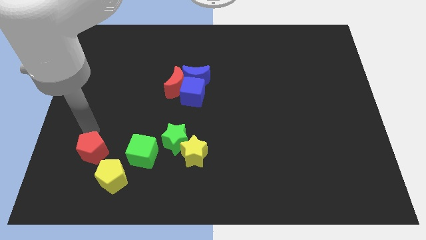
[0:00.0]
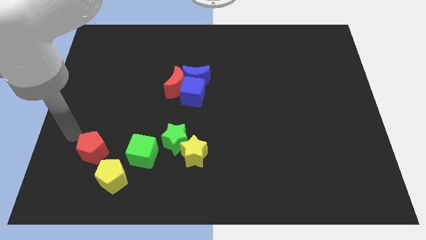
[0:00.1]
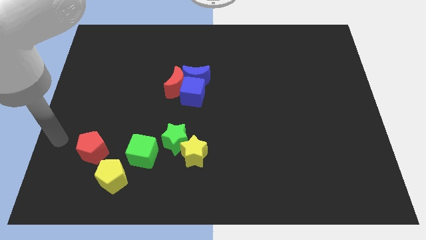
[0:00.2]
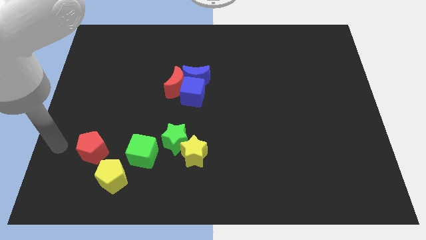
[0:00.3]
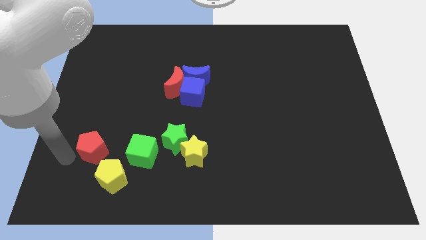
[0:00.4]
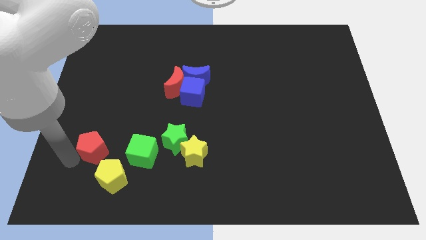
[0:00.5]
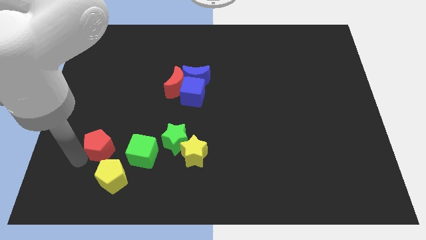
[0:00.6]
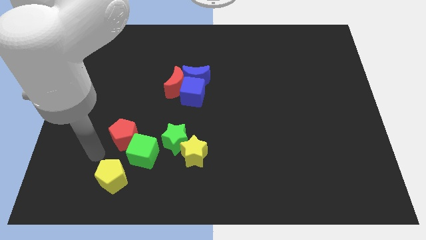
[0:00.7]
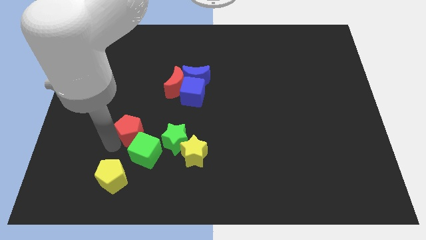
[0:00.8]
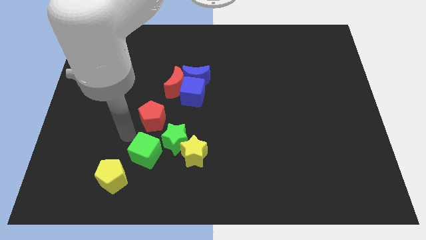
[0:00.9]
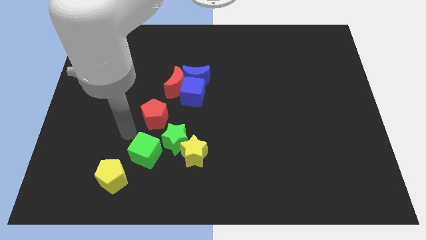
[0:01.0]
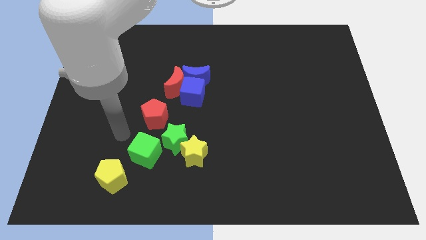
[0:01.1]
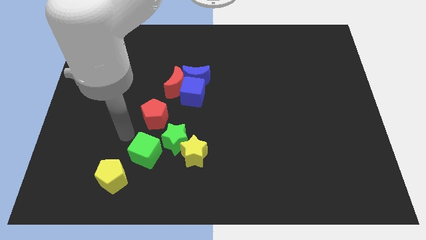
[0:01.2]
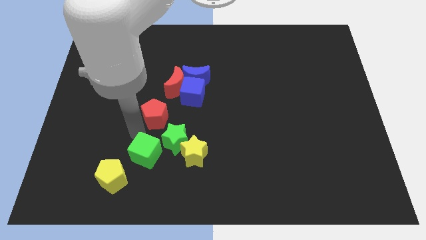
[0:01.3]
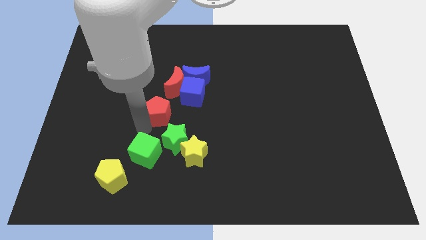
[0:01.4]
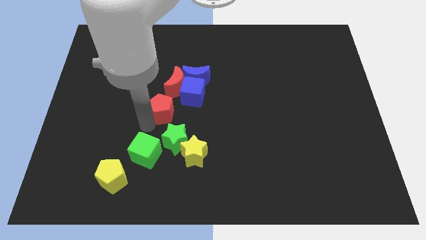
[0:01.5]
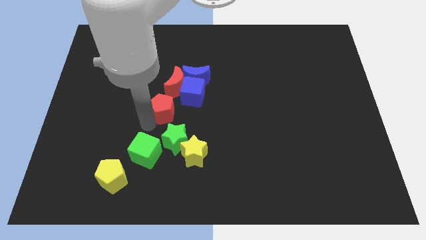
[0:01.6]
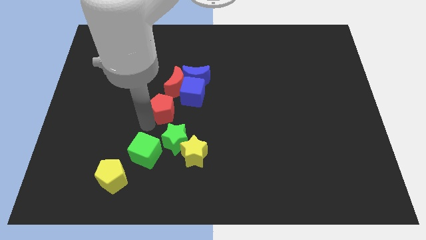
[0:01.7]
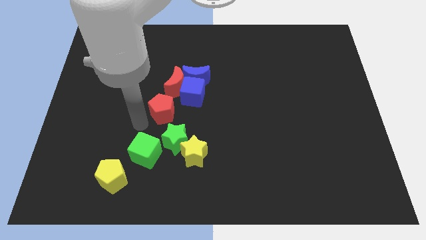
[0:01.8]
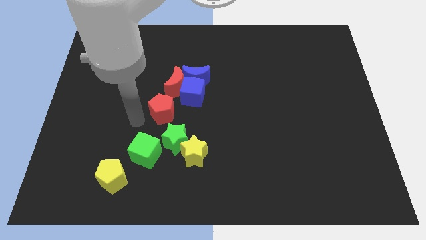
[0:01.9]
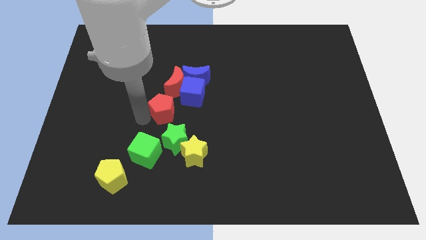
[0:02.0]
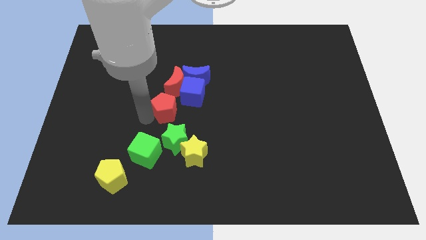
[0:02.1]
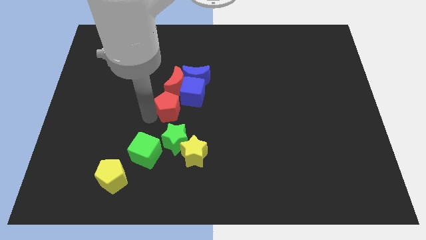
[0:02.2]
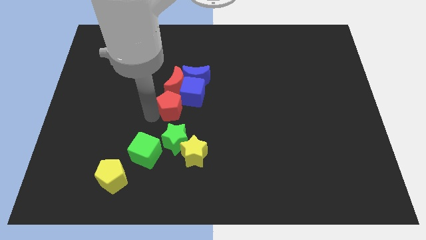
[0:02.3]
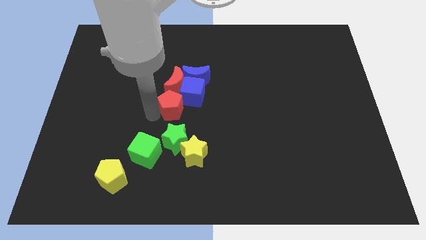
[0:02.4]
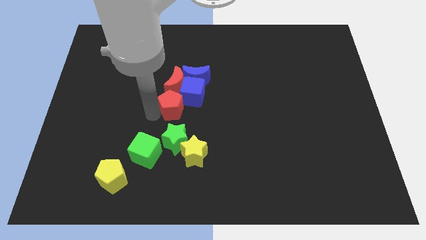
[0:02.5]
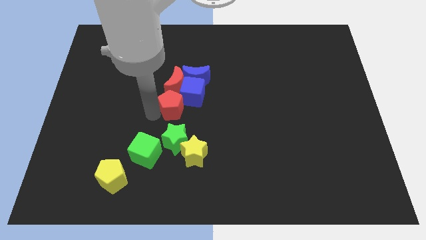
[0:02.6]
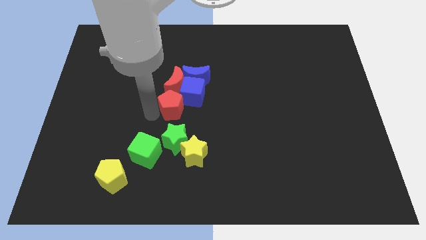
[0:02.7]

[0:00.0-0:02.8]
move the red pentagon to the bottom of the red crescent

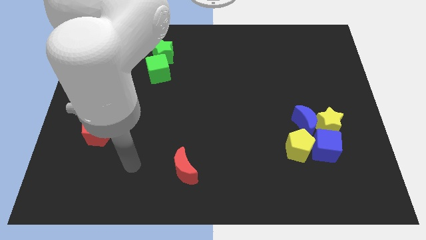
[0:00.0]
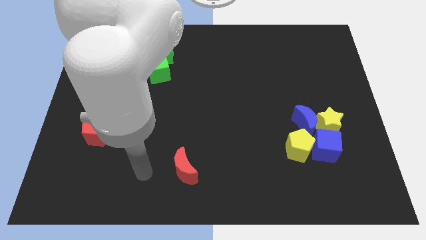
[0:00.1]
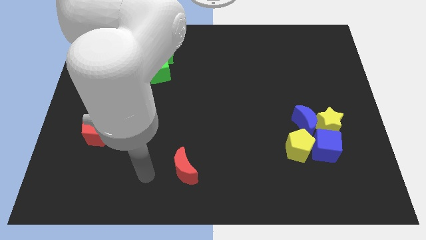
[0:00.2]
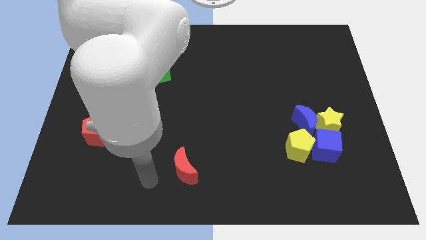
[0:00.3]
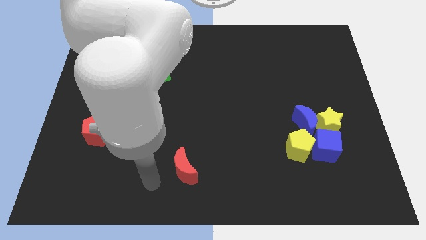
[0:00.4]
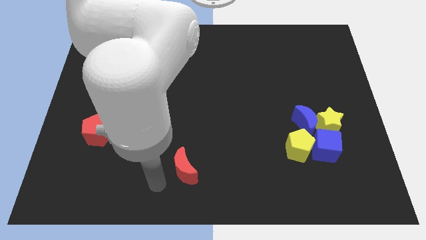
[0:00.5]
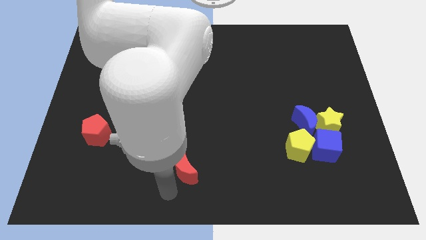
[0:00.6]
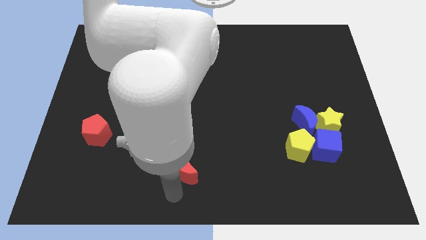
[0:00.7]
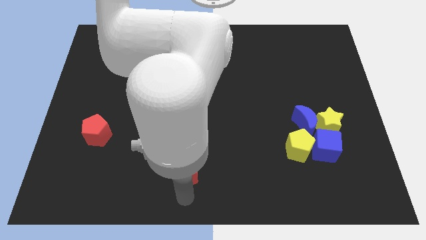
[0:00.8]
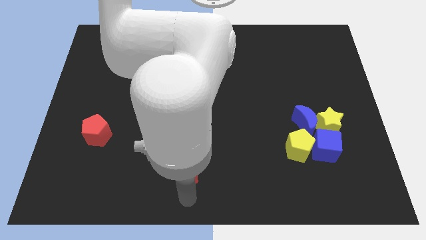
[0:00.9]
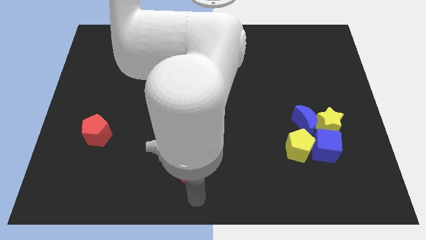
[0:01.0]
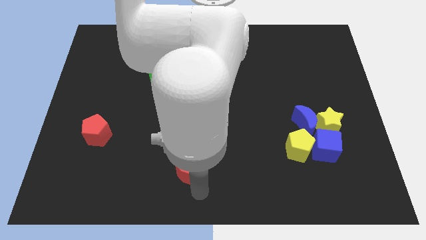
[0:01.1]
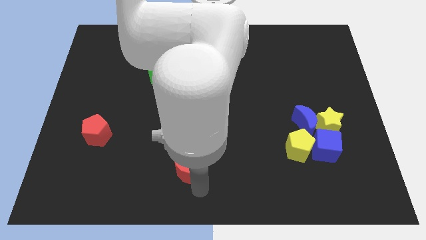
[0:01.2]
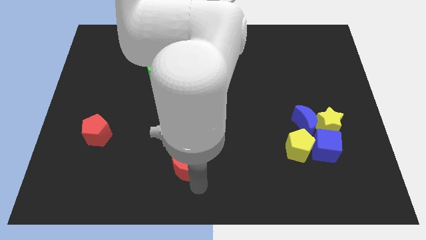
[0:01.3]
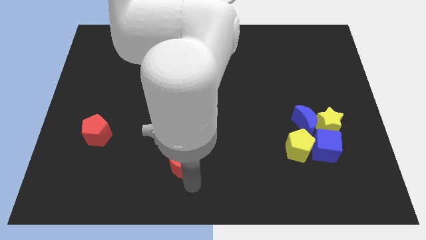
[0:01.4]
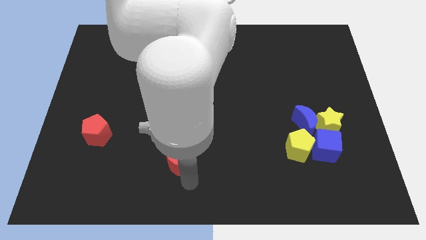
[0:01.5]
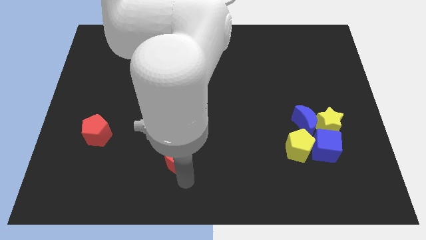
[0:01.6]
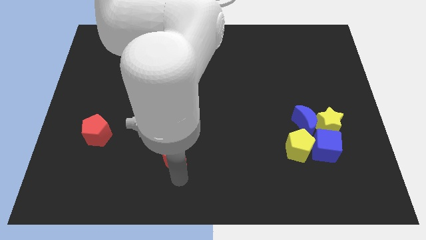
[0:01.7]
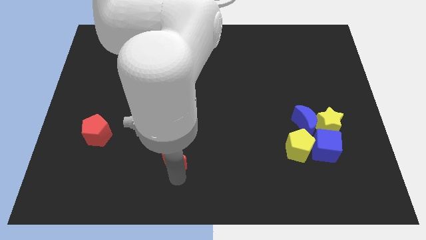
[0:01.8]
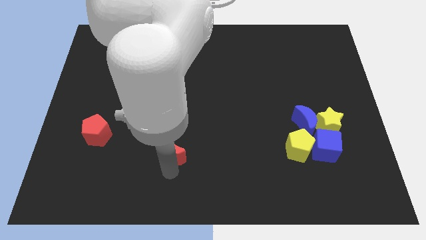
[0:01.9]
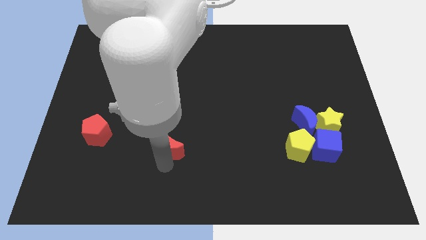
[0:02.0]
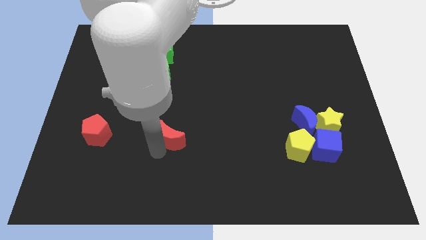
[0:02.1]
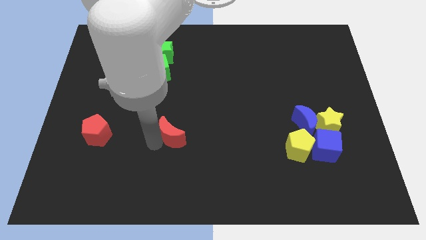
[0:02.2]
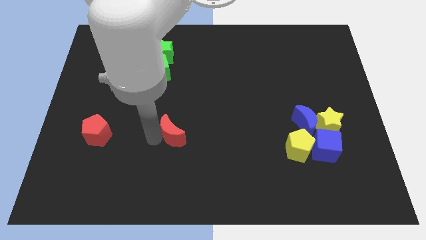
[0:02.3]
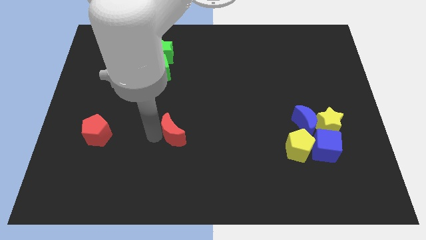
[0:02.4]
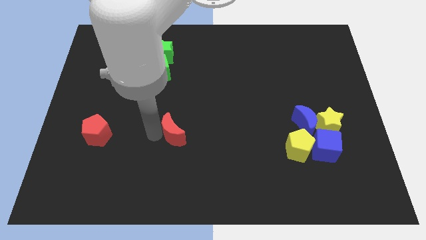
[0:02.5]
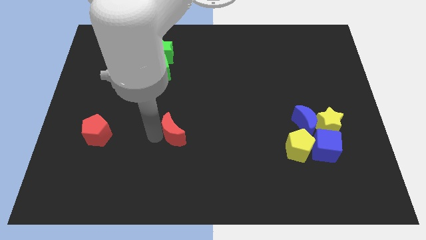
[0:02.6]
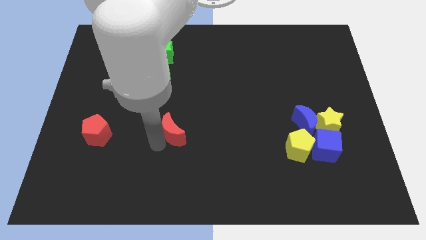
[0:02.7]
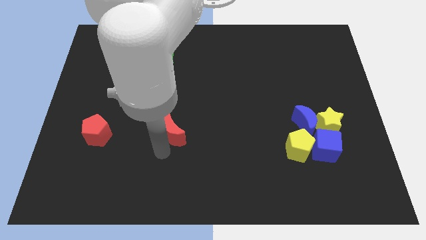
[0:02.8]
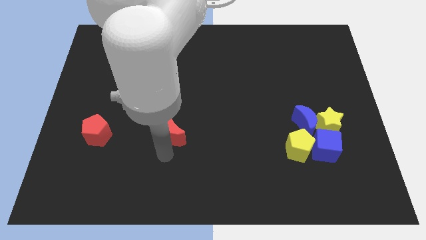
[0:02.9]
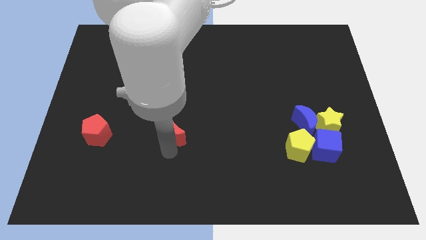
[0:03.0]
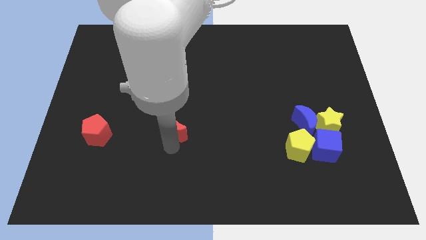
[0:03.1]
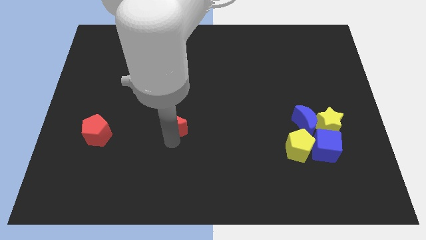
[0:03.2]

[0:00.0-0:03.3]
move the red moon to the right of the red pentagon

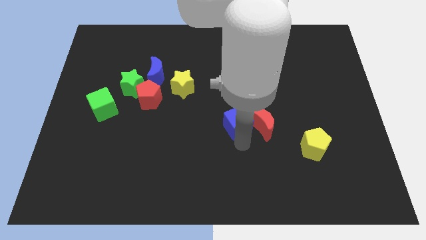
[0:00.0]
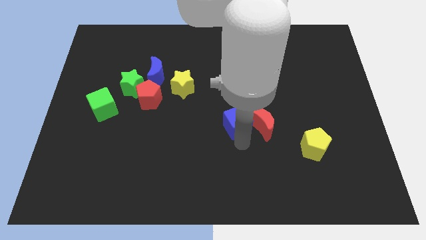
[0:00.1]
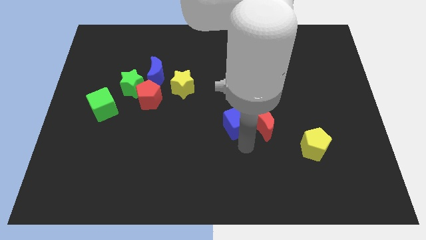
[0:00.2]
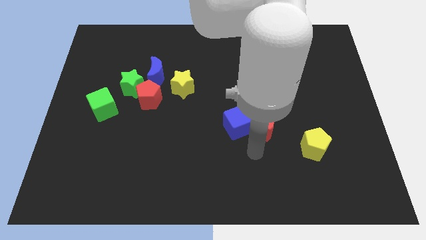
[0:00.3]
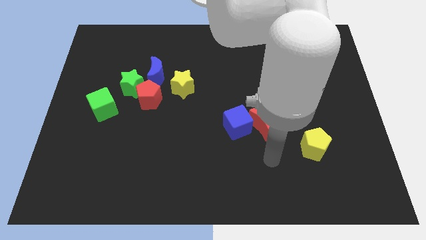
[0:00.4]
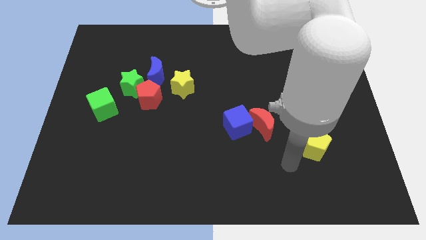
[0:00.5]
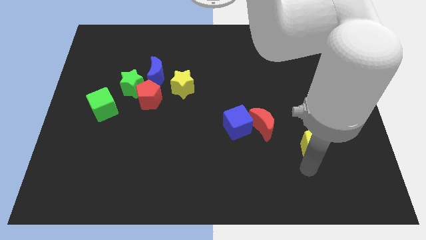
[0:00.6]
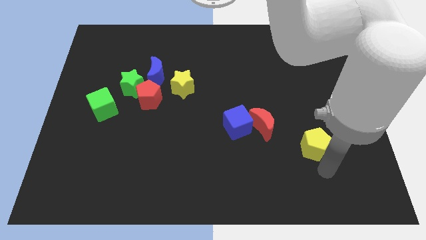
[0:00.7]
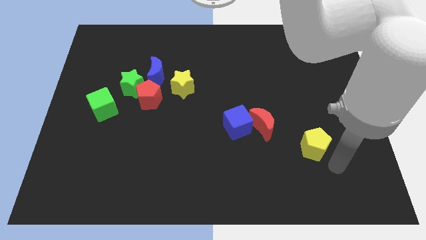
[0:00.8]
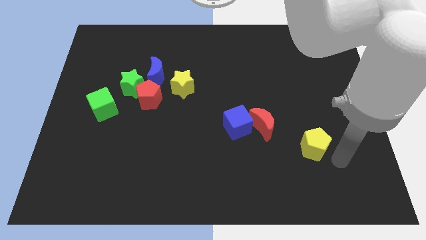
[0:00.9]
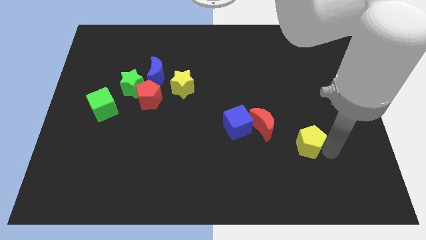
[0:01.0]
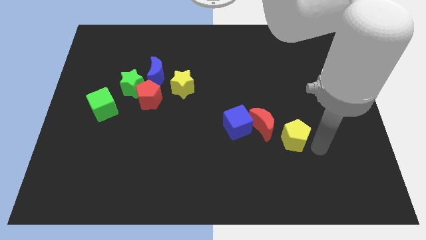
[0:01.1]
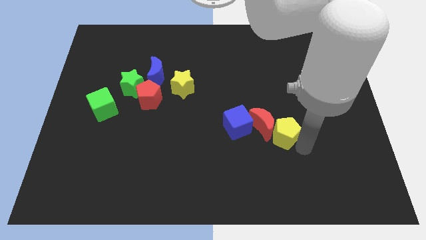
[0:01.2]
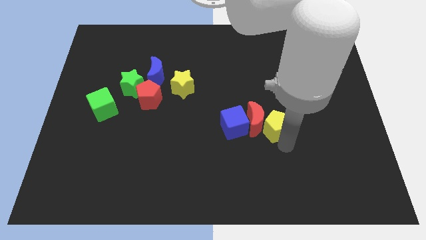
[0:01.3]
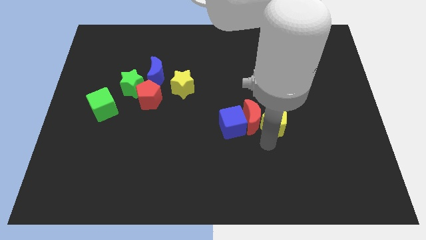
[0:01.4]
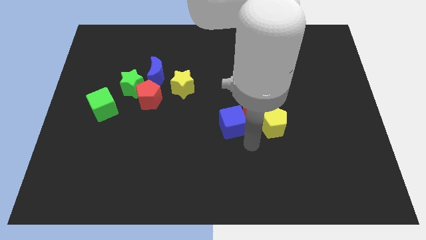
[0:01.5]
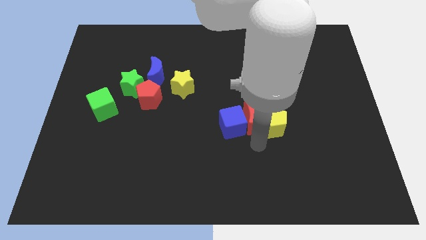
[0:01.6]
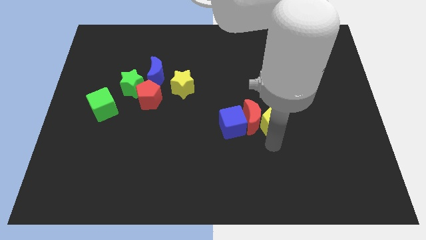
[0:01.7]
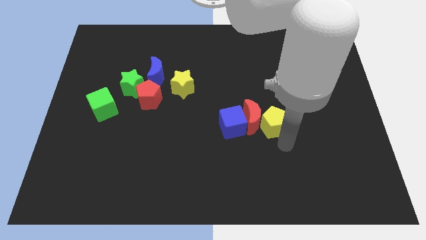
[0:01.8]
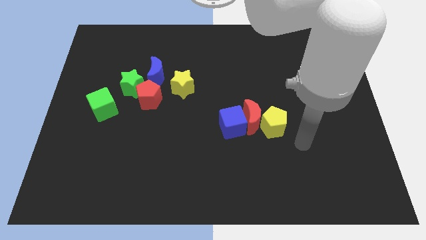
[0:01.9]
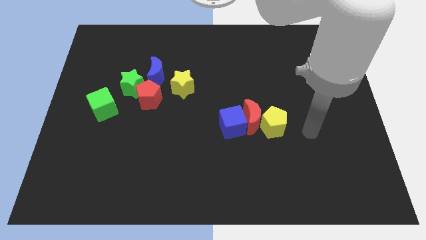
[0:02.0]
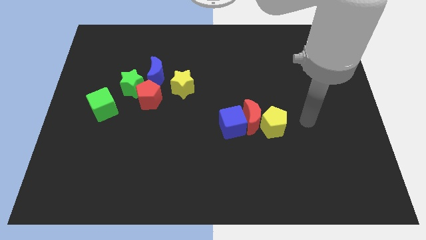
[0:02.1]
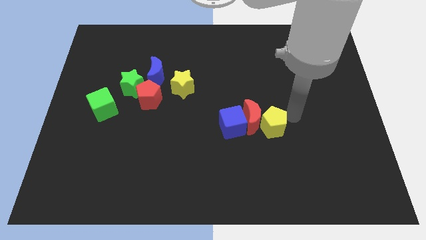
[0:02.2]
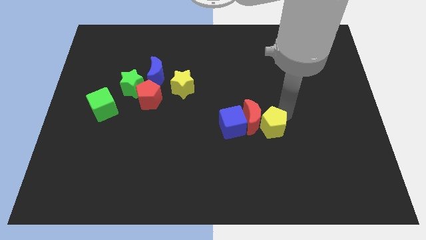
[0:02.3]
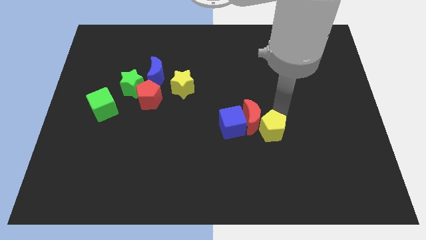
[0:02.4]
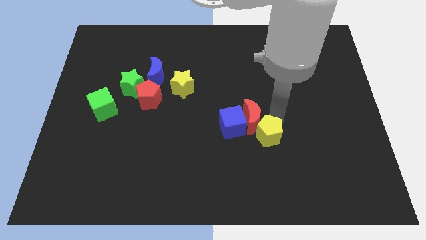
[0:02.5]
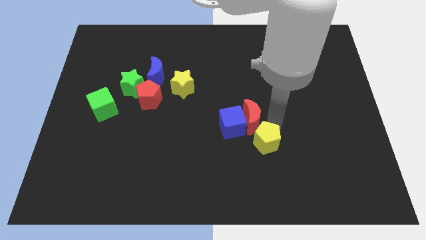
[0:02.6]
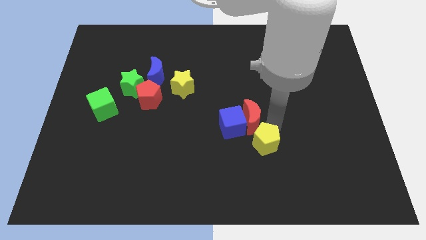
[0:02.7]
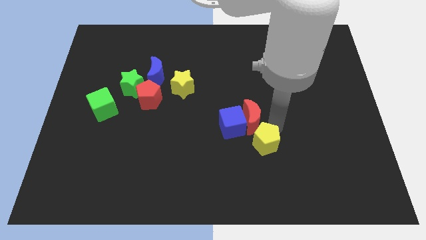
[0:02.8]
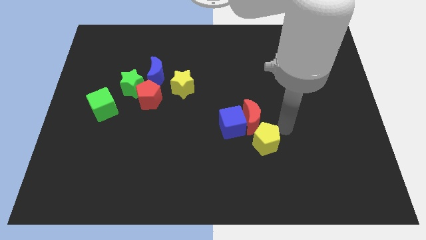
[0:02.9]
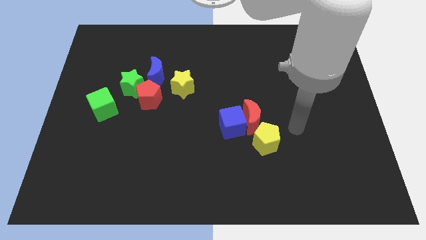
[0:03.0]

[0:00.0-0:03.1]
place the yellow pentagon to the bottom of red crescent
